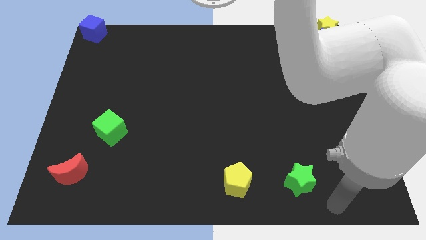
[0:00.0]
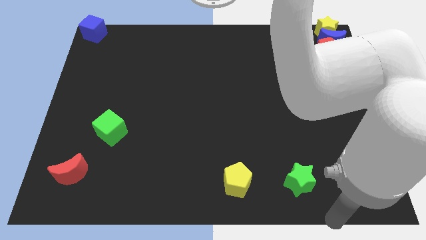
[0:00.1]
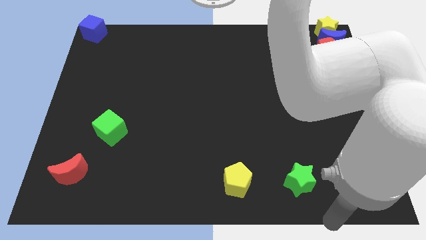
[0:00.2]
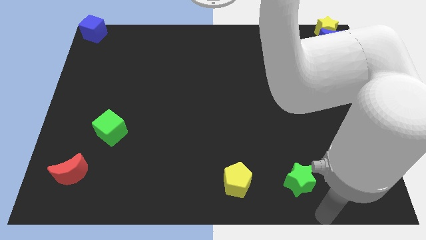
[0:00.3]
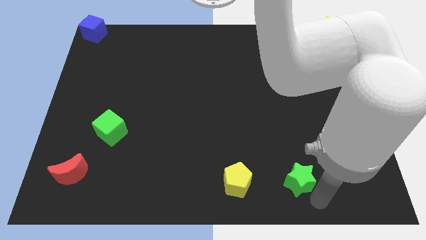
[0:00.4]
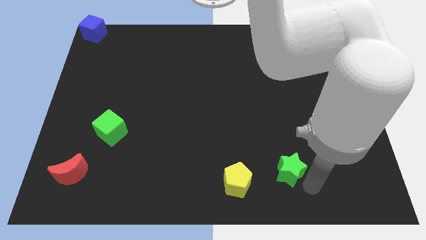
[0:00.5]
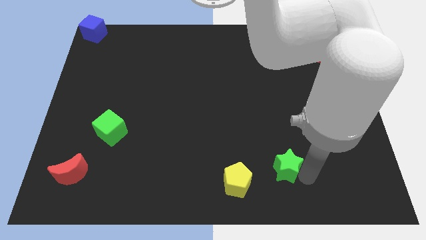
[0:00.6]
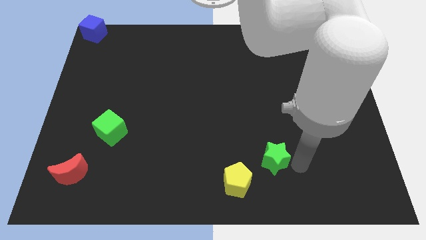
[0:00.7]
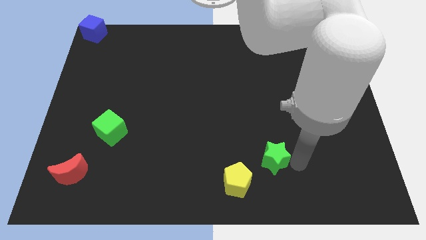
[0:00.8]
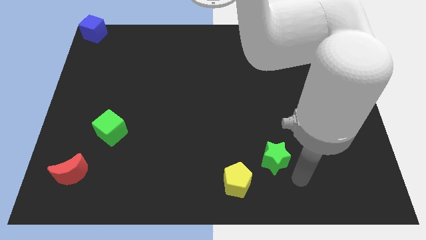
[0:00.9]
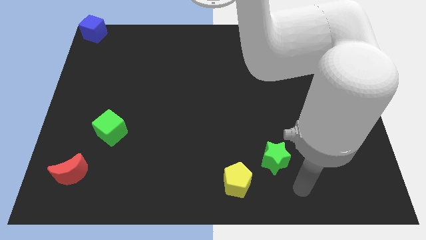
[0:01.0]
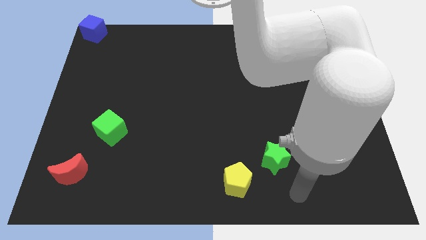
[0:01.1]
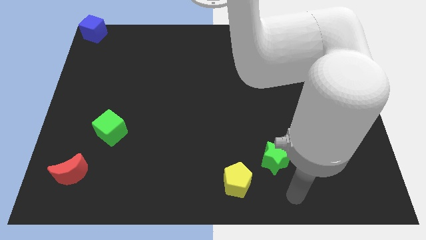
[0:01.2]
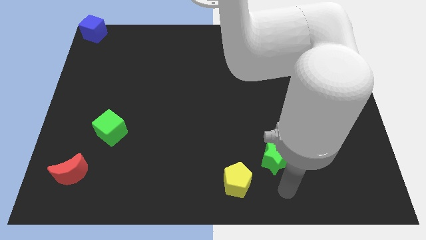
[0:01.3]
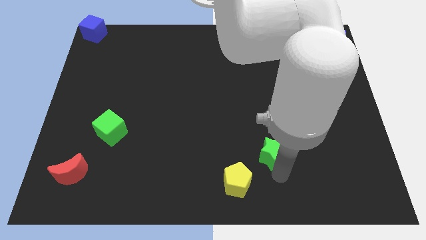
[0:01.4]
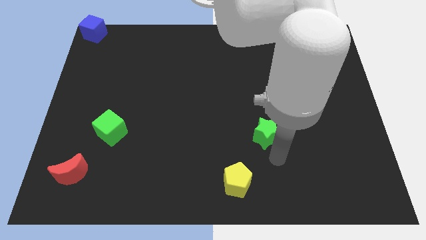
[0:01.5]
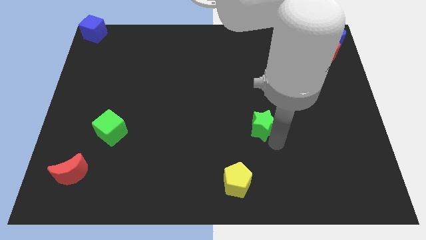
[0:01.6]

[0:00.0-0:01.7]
place the green star vertically above the yellow pentagon

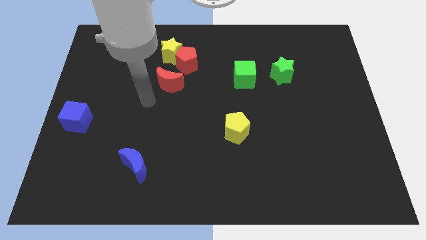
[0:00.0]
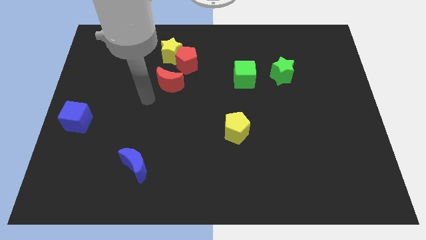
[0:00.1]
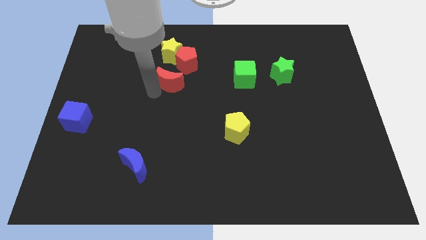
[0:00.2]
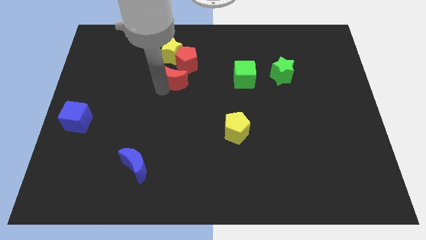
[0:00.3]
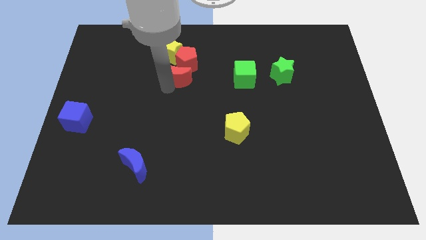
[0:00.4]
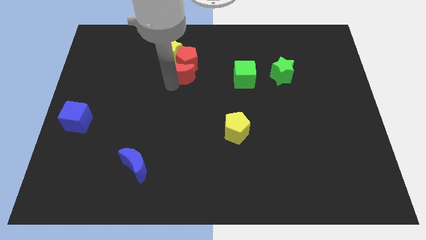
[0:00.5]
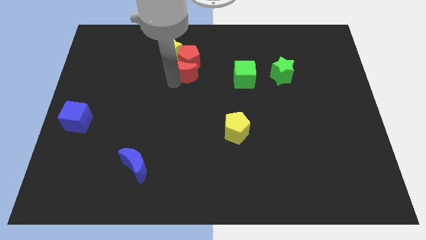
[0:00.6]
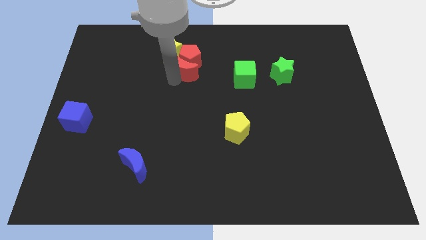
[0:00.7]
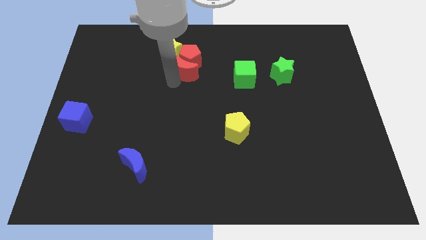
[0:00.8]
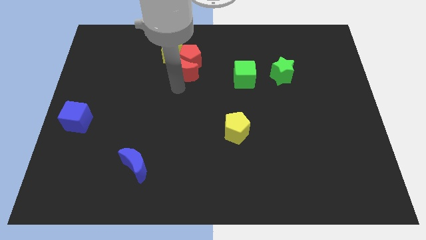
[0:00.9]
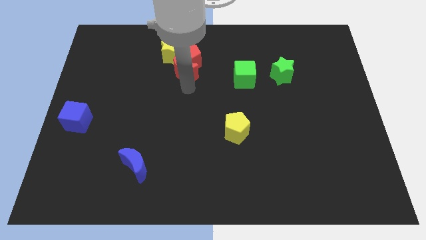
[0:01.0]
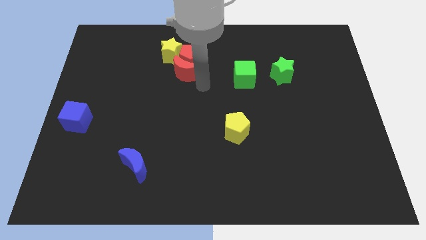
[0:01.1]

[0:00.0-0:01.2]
push the red crescent to left of the green cube

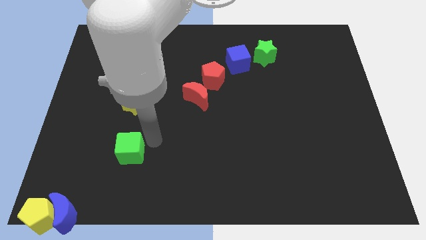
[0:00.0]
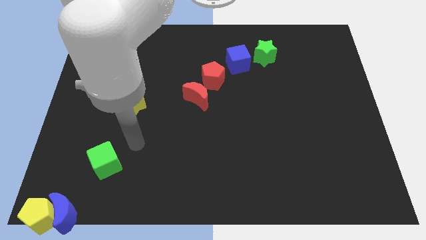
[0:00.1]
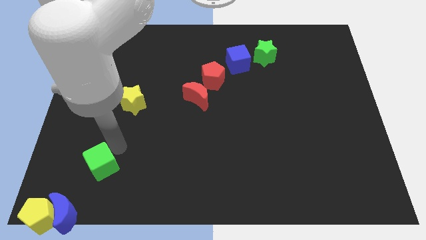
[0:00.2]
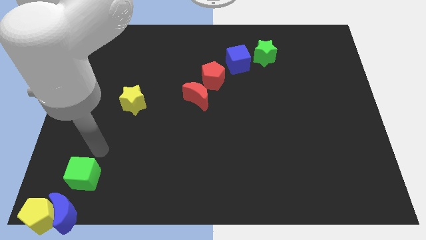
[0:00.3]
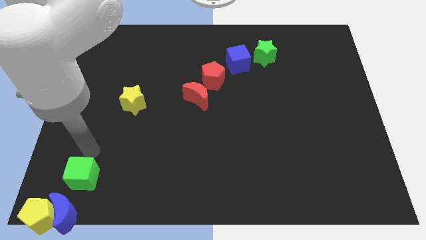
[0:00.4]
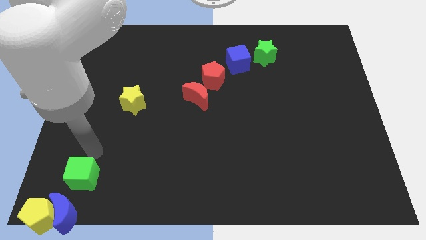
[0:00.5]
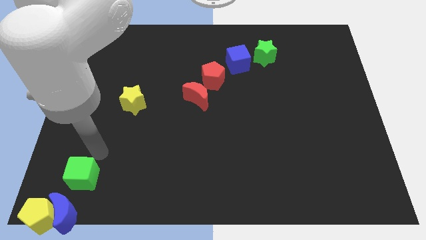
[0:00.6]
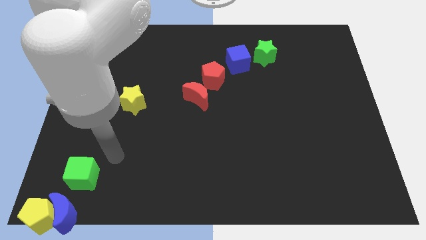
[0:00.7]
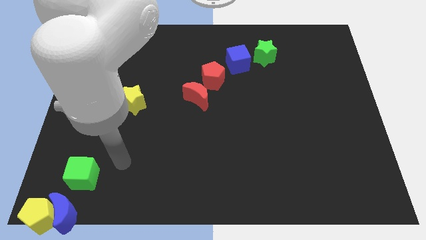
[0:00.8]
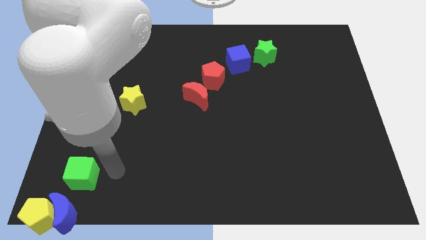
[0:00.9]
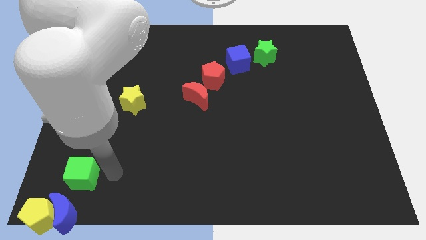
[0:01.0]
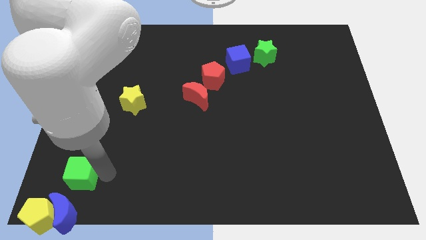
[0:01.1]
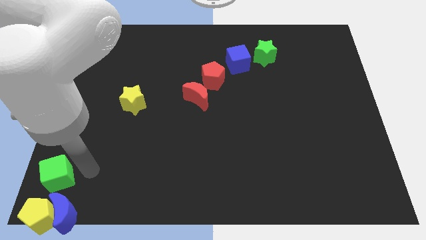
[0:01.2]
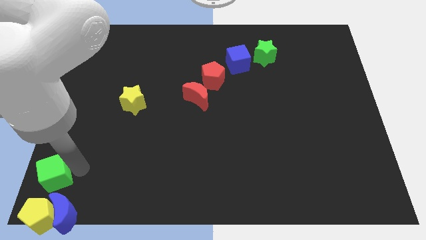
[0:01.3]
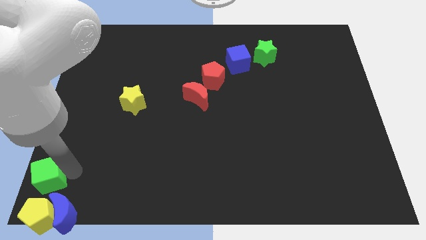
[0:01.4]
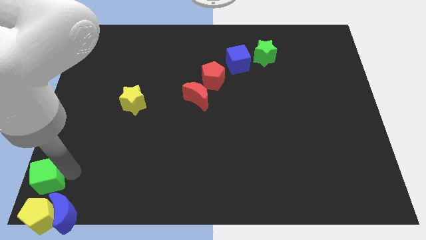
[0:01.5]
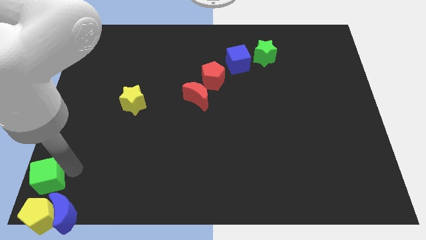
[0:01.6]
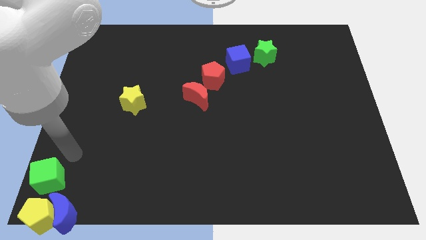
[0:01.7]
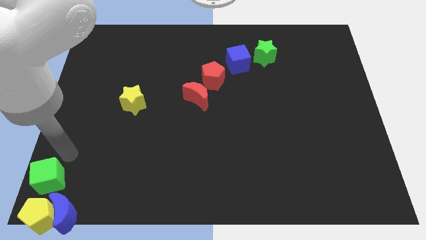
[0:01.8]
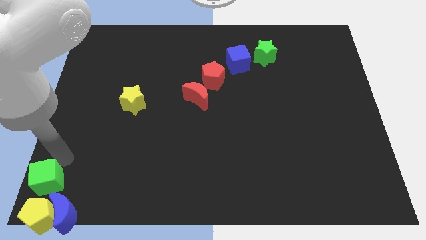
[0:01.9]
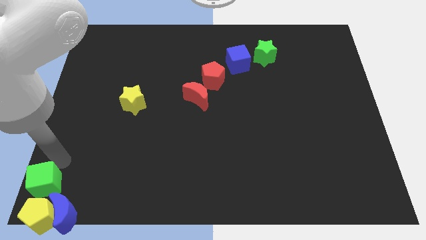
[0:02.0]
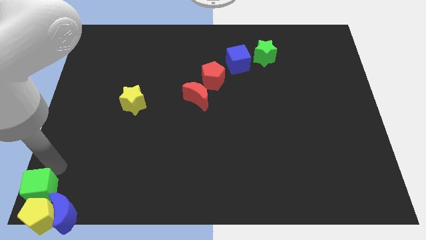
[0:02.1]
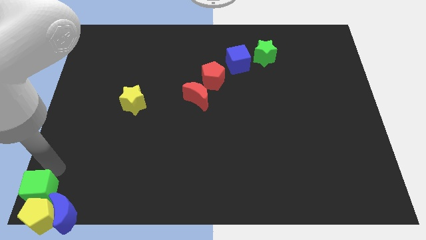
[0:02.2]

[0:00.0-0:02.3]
move the green cube to the top of the yellow pentagon

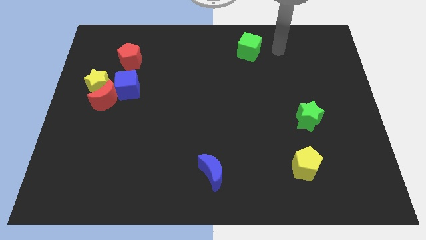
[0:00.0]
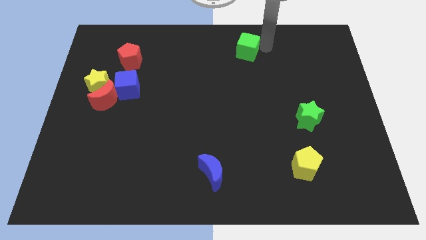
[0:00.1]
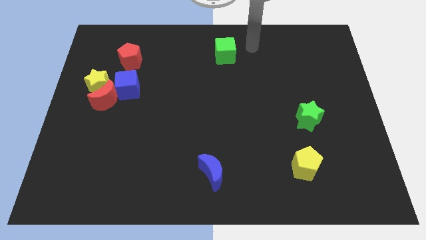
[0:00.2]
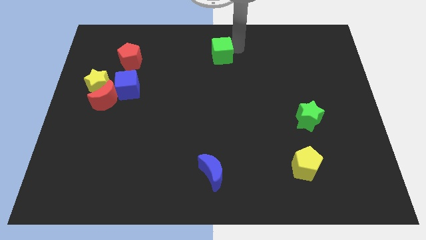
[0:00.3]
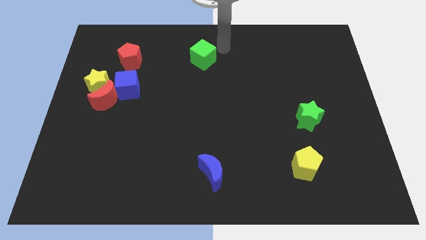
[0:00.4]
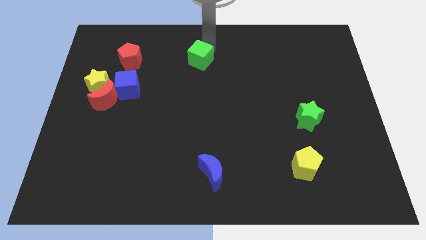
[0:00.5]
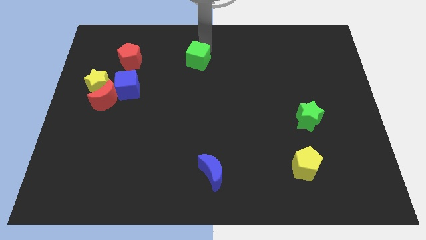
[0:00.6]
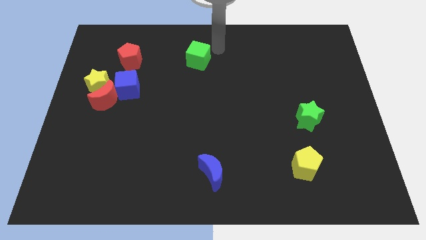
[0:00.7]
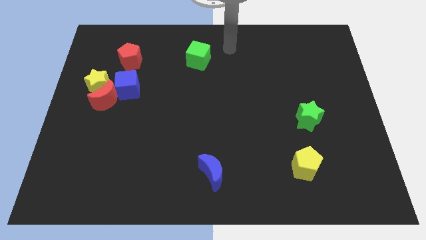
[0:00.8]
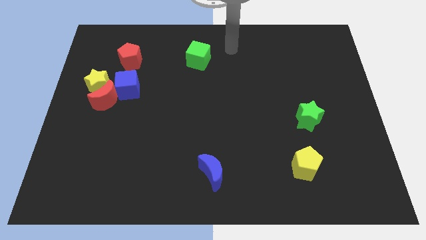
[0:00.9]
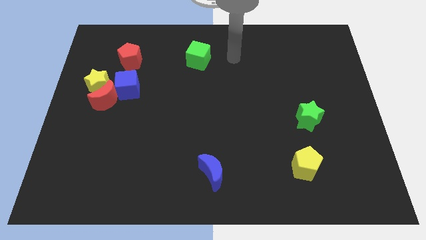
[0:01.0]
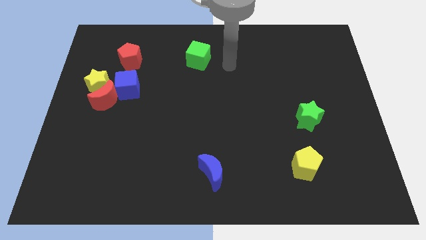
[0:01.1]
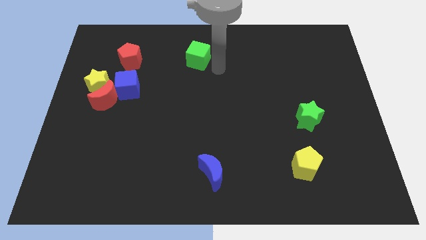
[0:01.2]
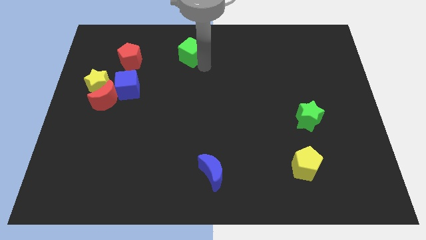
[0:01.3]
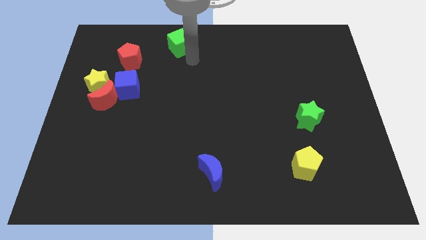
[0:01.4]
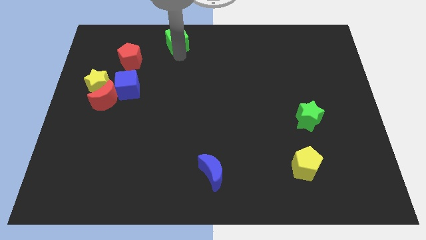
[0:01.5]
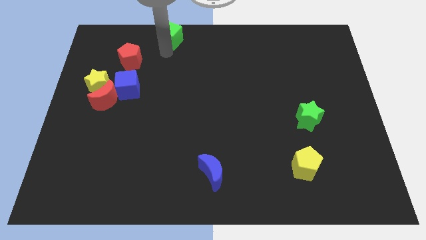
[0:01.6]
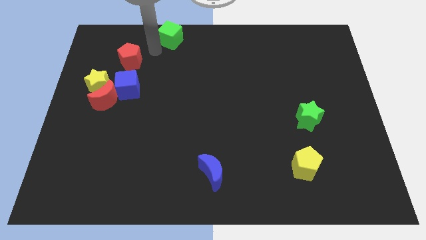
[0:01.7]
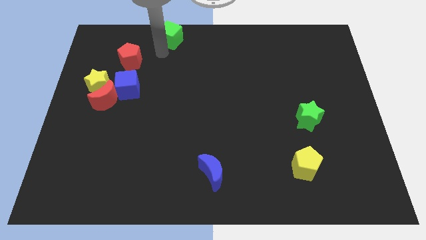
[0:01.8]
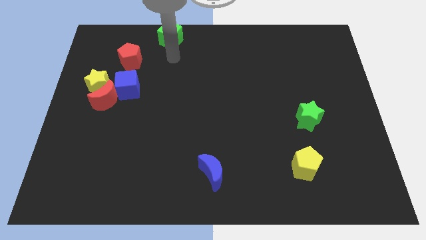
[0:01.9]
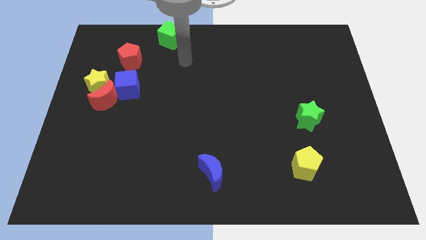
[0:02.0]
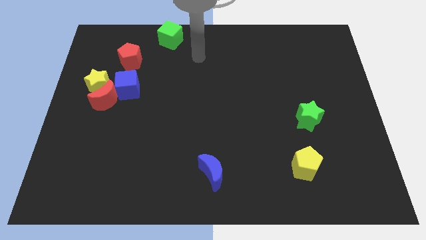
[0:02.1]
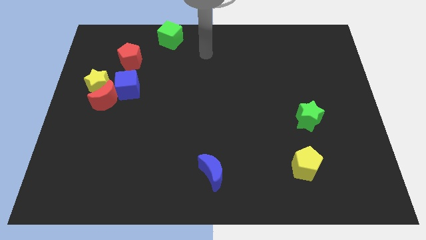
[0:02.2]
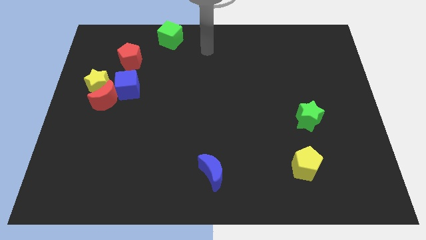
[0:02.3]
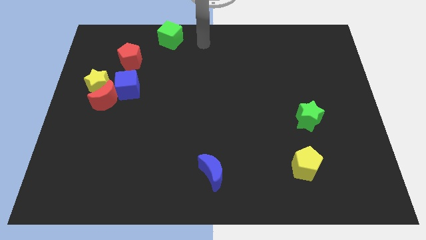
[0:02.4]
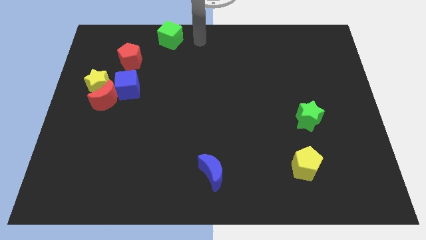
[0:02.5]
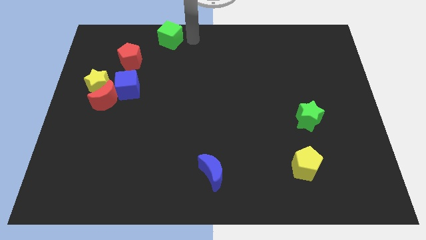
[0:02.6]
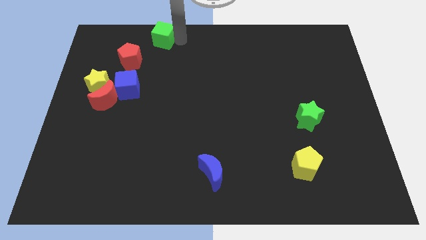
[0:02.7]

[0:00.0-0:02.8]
move the green cube towards the top left

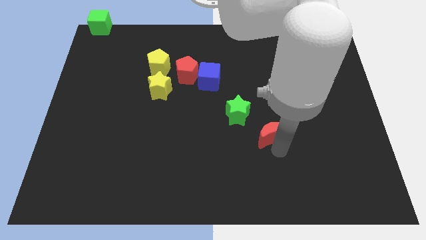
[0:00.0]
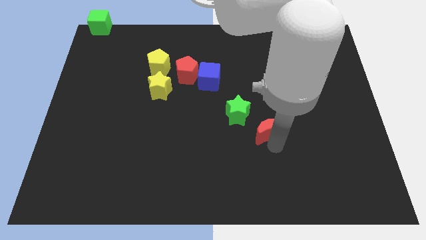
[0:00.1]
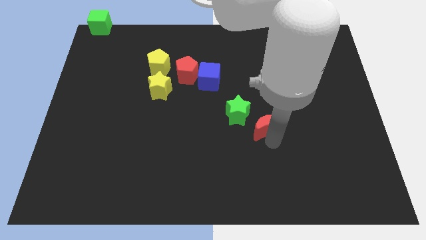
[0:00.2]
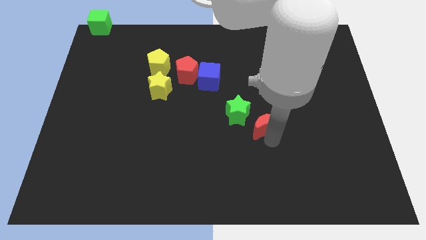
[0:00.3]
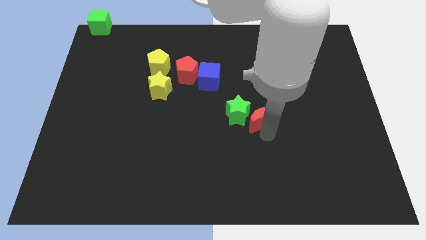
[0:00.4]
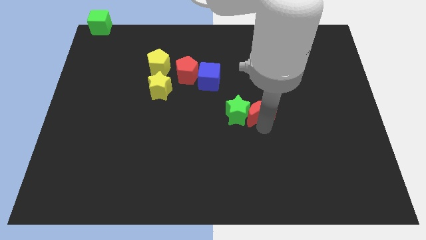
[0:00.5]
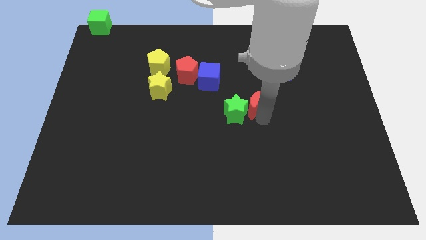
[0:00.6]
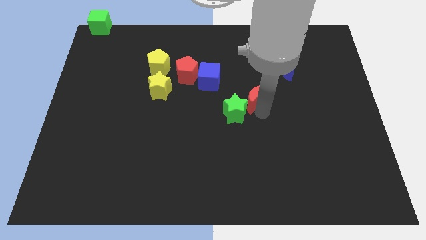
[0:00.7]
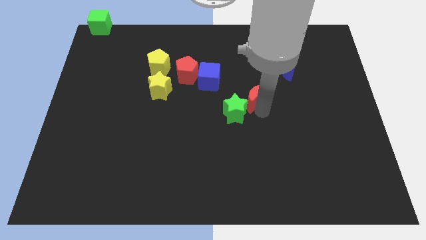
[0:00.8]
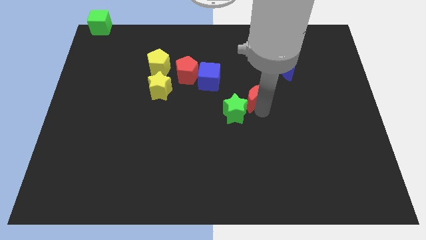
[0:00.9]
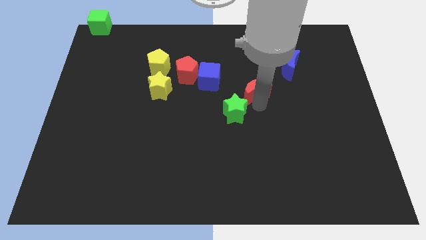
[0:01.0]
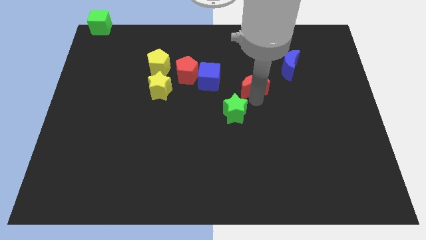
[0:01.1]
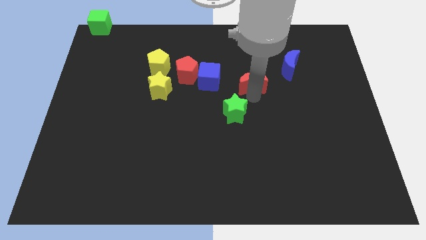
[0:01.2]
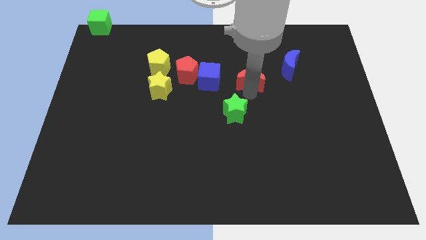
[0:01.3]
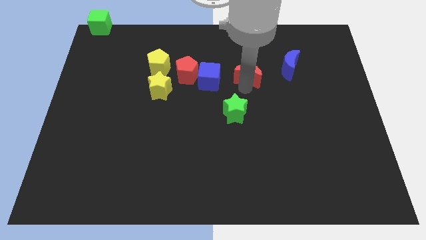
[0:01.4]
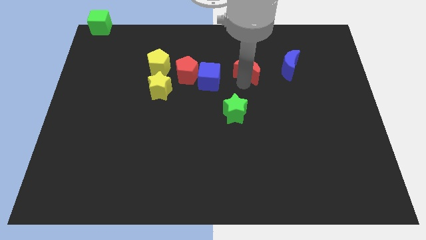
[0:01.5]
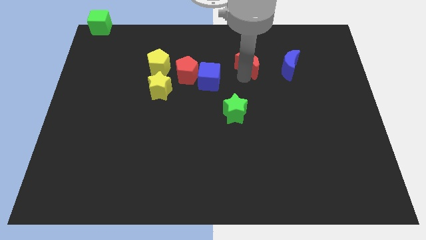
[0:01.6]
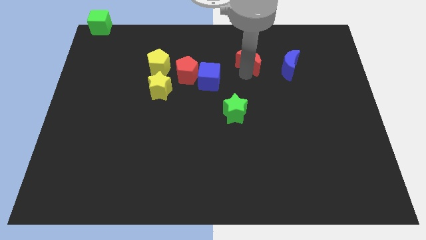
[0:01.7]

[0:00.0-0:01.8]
push the blue moon towards the top center of the board
